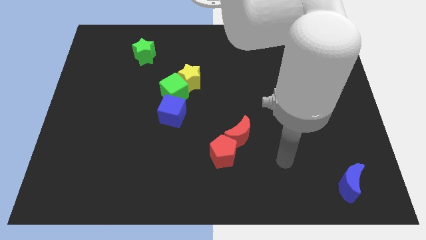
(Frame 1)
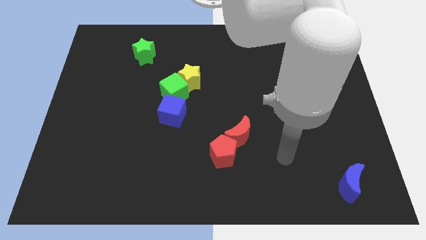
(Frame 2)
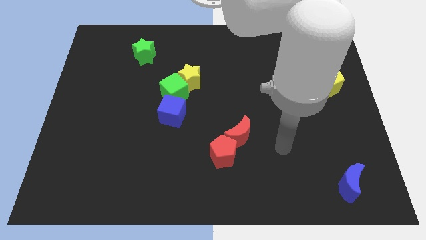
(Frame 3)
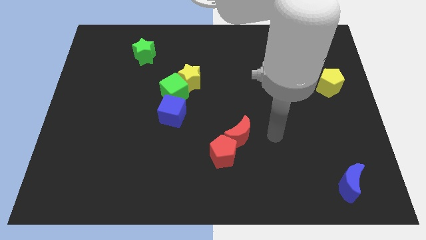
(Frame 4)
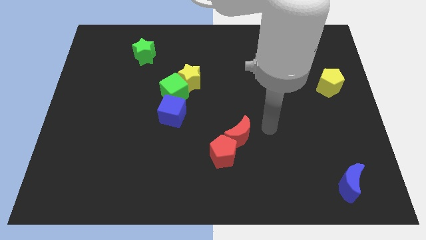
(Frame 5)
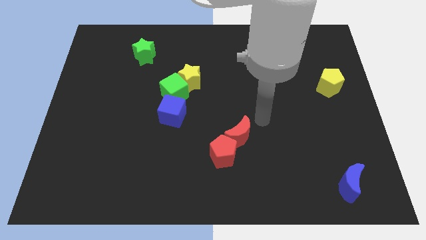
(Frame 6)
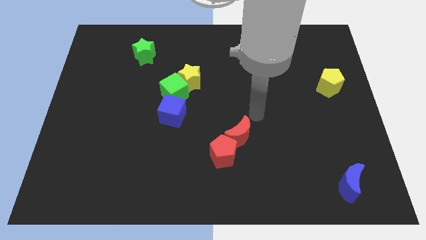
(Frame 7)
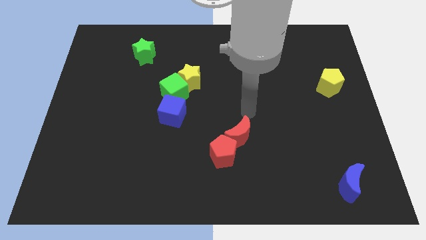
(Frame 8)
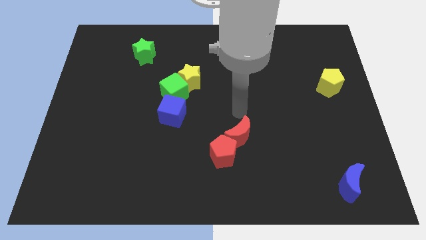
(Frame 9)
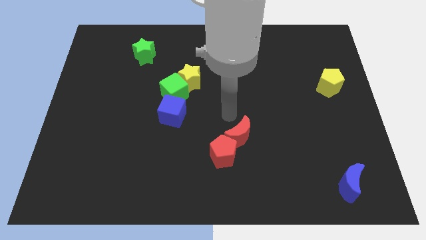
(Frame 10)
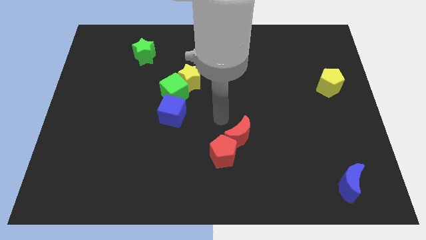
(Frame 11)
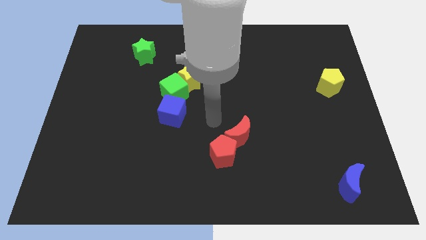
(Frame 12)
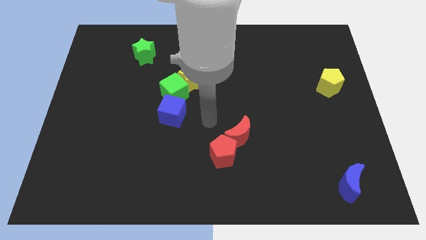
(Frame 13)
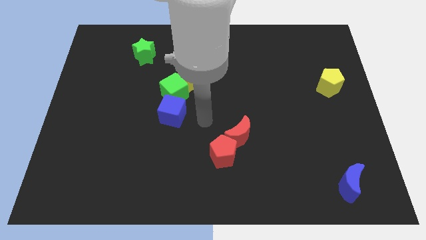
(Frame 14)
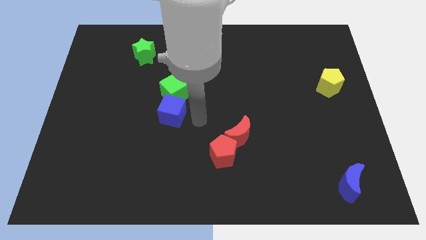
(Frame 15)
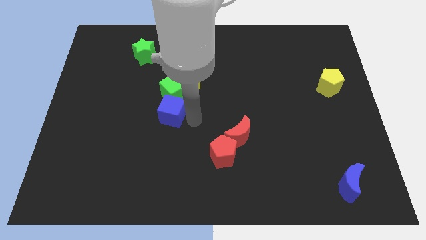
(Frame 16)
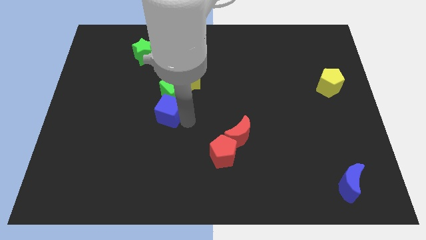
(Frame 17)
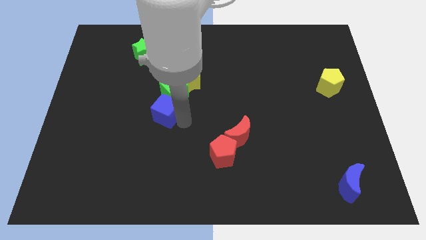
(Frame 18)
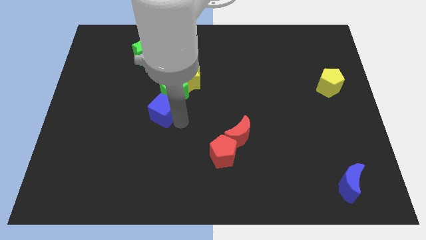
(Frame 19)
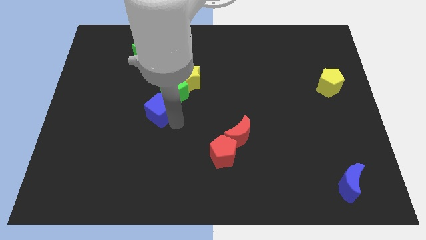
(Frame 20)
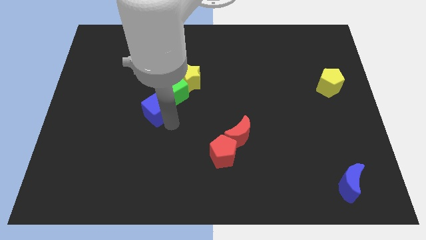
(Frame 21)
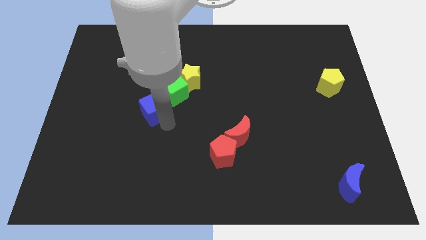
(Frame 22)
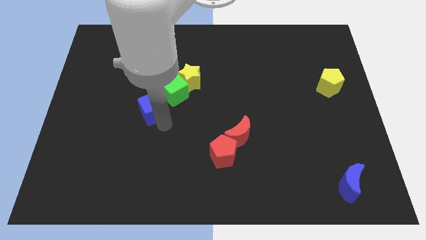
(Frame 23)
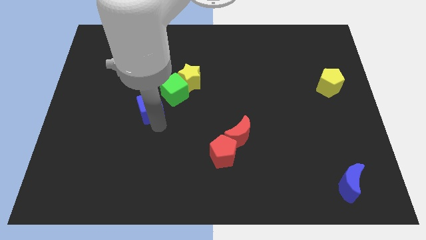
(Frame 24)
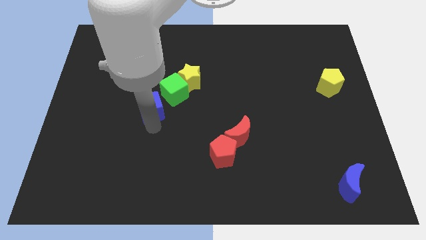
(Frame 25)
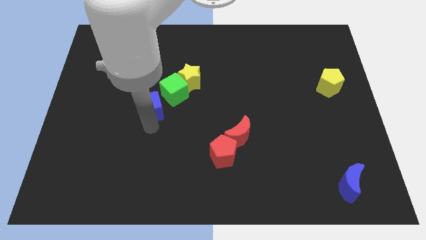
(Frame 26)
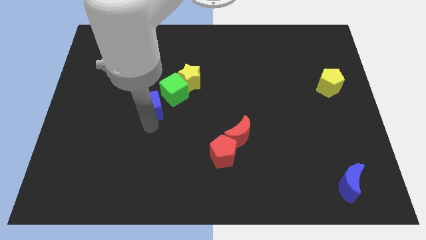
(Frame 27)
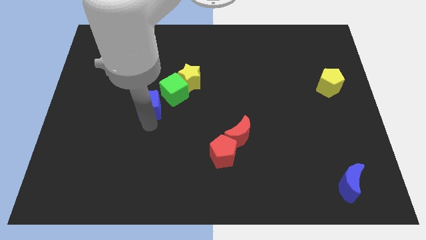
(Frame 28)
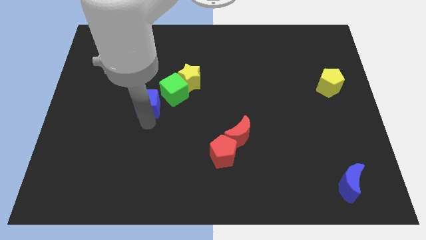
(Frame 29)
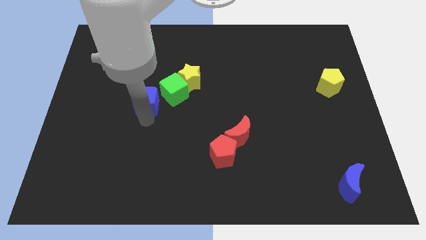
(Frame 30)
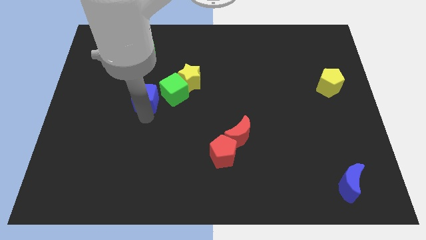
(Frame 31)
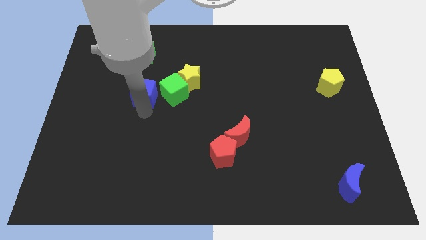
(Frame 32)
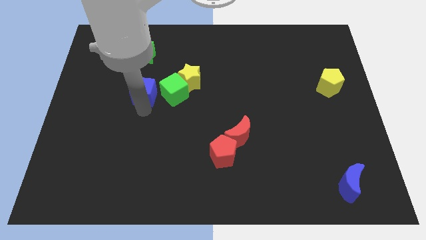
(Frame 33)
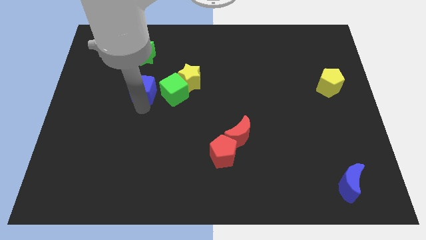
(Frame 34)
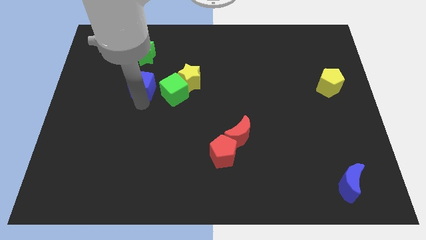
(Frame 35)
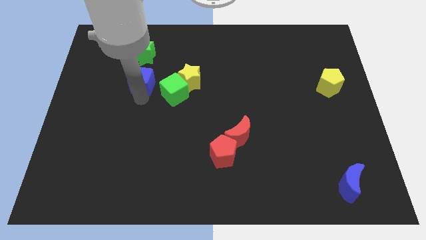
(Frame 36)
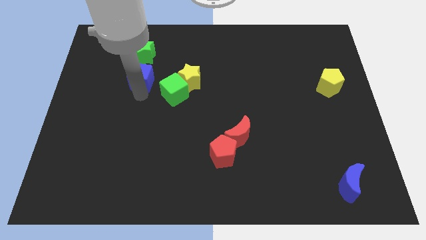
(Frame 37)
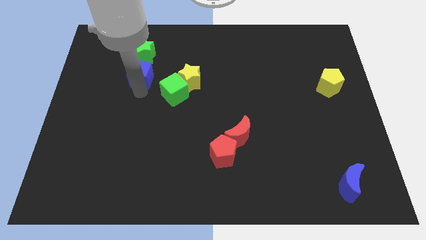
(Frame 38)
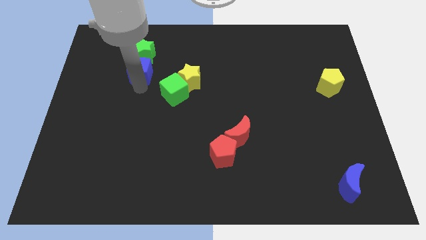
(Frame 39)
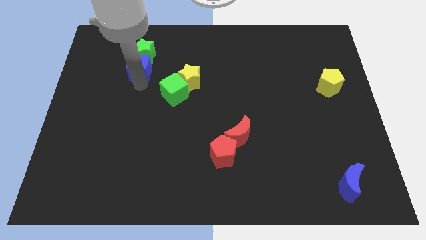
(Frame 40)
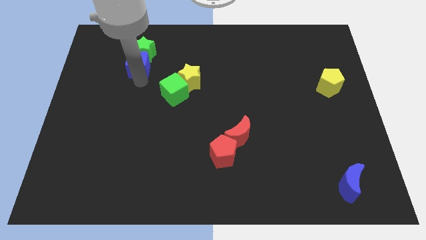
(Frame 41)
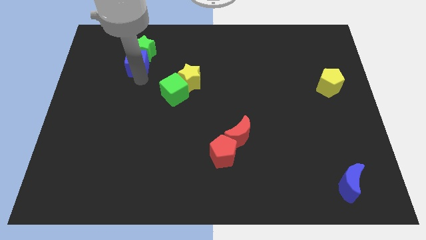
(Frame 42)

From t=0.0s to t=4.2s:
move the blue cube next to the green star

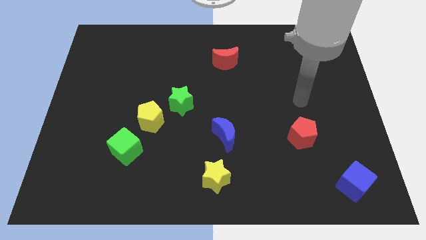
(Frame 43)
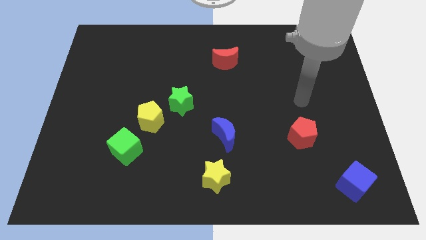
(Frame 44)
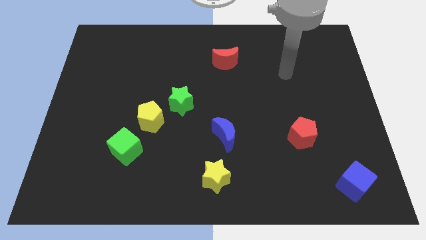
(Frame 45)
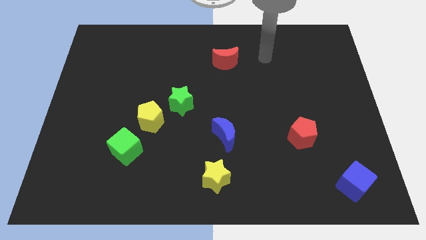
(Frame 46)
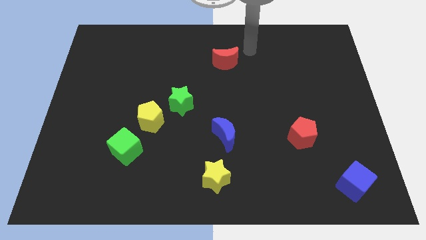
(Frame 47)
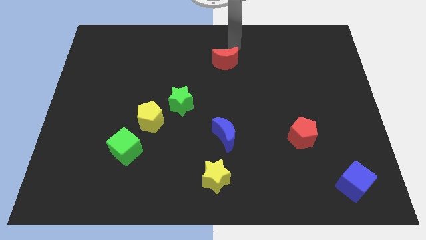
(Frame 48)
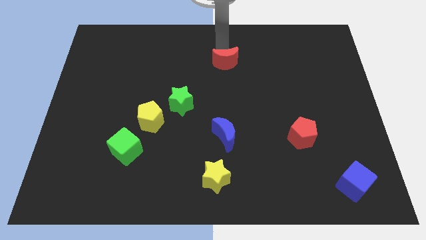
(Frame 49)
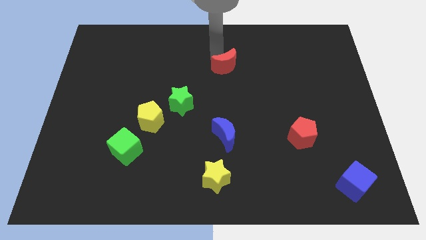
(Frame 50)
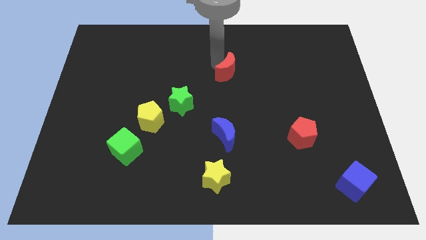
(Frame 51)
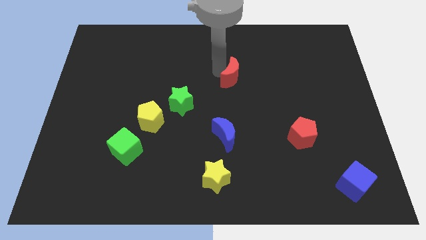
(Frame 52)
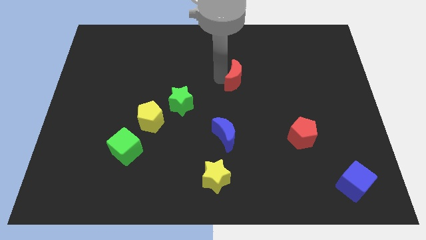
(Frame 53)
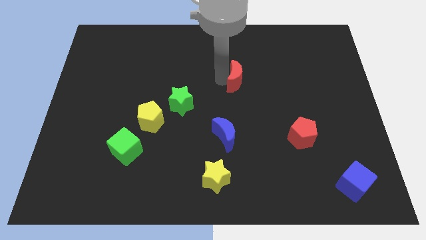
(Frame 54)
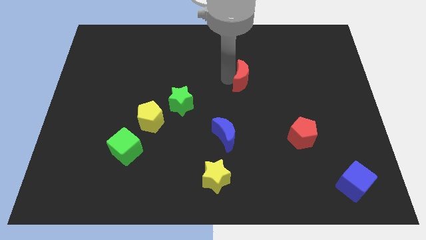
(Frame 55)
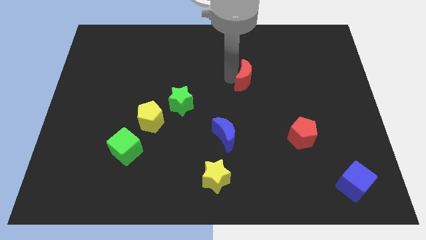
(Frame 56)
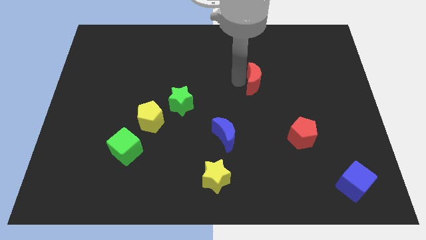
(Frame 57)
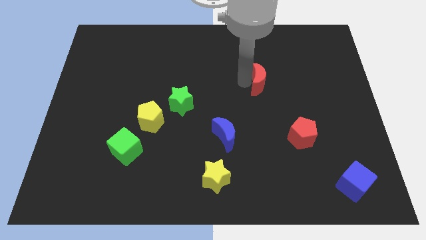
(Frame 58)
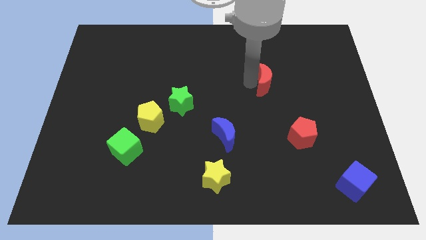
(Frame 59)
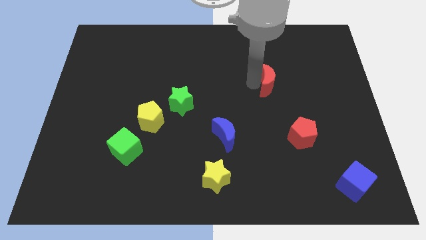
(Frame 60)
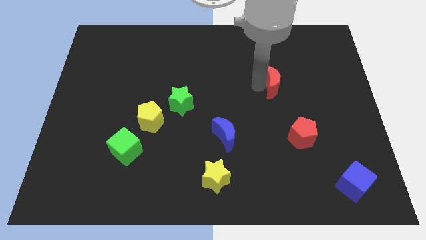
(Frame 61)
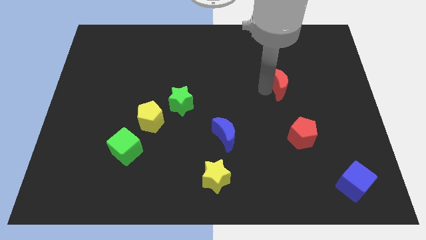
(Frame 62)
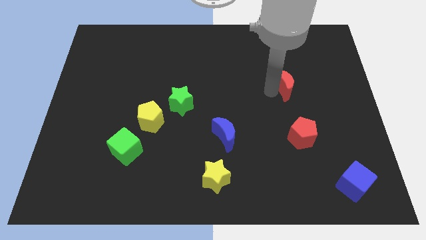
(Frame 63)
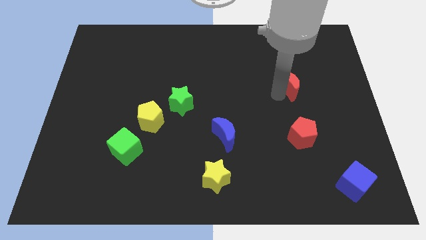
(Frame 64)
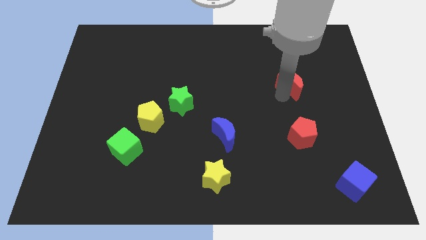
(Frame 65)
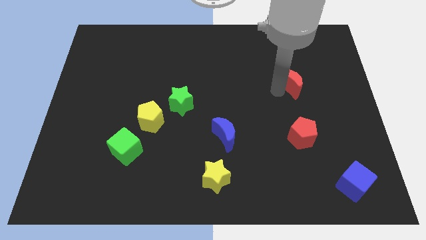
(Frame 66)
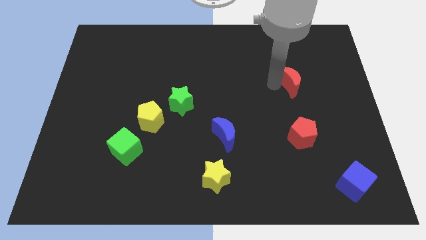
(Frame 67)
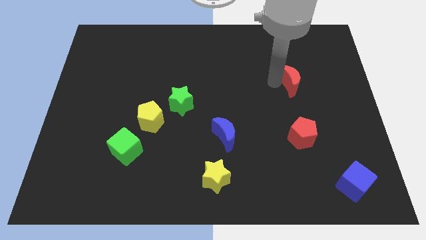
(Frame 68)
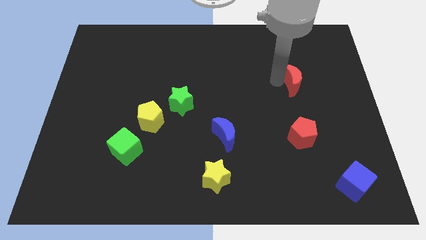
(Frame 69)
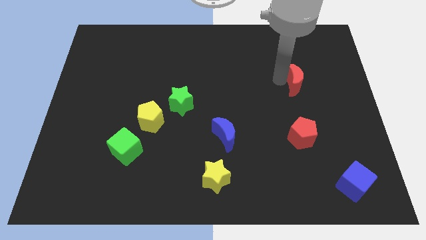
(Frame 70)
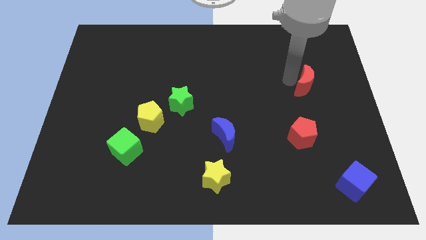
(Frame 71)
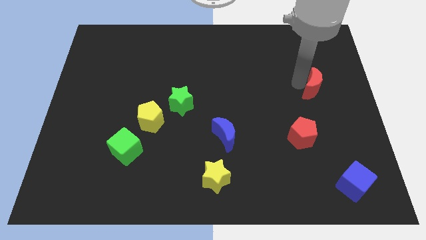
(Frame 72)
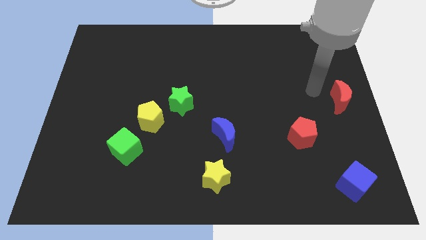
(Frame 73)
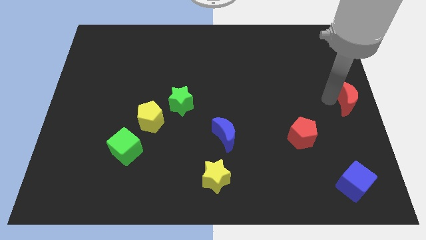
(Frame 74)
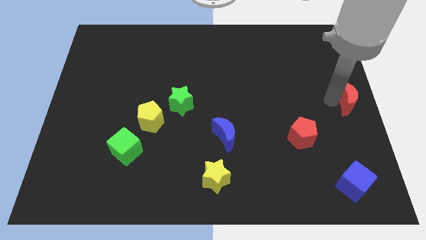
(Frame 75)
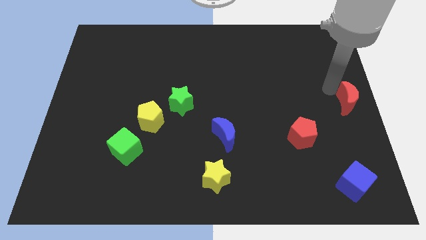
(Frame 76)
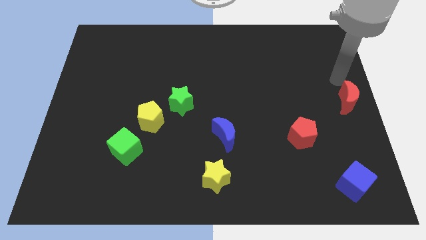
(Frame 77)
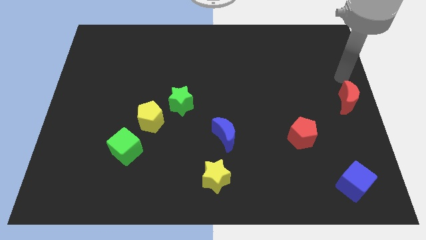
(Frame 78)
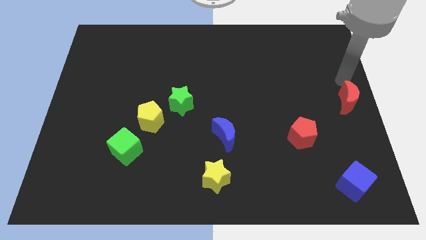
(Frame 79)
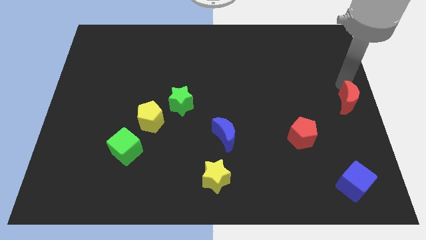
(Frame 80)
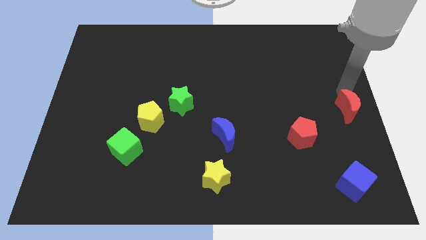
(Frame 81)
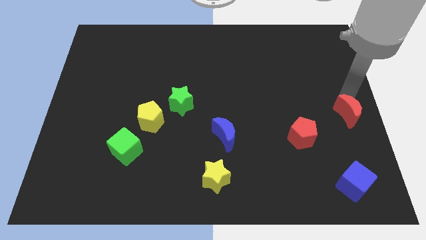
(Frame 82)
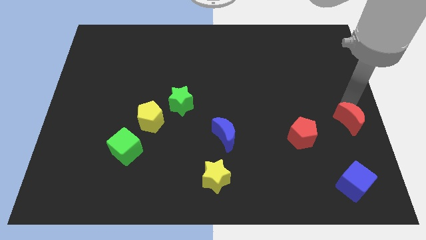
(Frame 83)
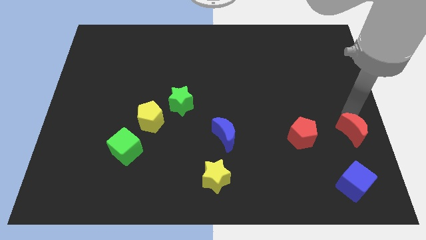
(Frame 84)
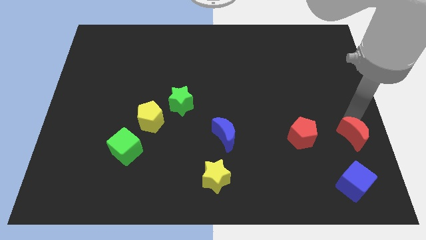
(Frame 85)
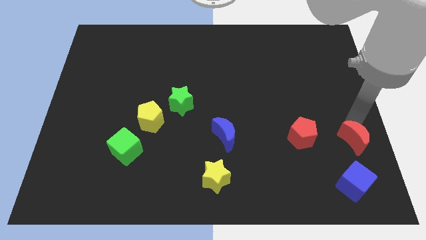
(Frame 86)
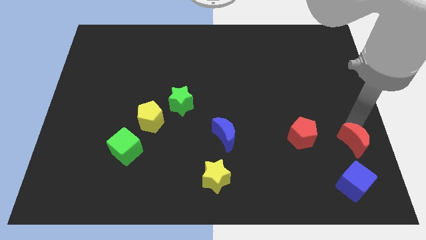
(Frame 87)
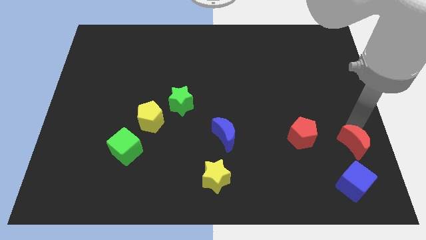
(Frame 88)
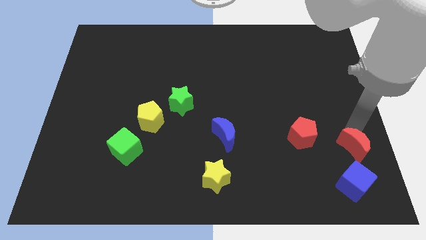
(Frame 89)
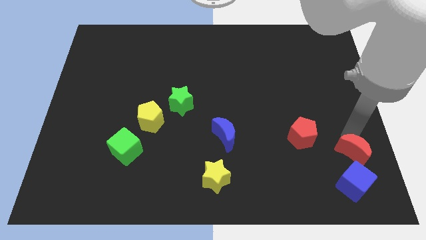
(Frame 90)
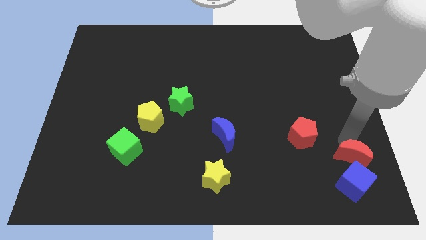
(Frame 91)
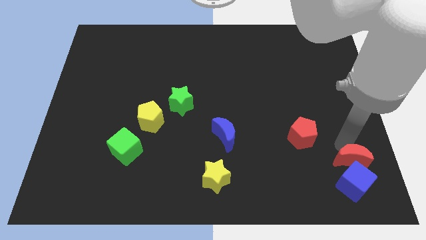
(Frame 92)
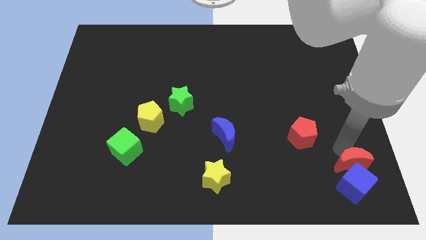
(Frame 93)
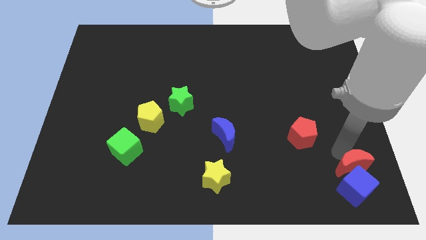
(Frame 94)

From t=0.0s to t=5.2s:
slide the red moon close to the blue cube
